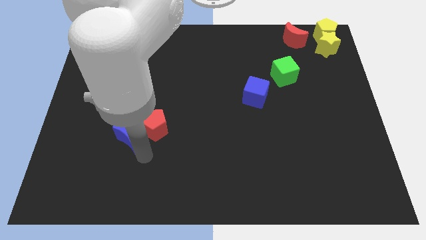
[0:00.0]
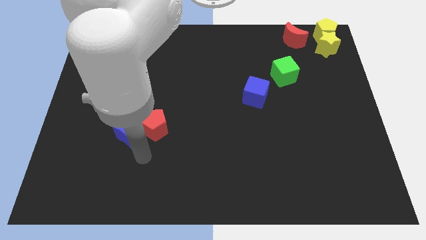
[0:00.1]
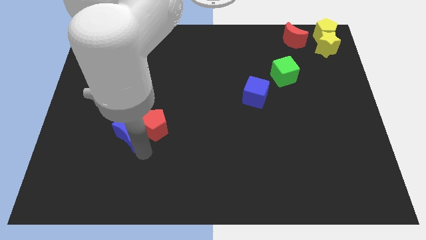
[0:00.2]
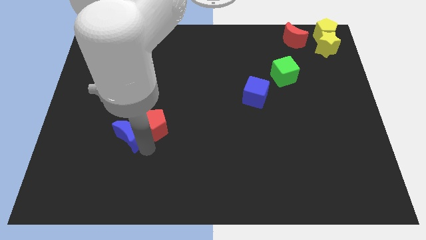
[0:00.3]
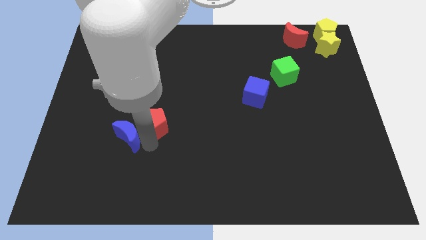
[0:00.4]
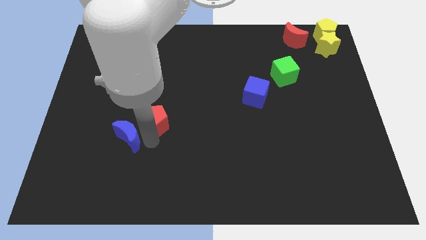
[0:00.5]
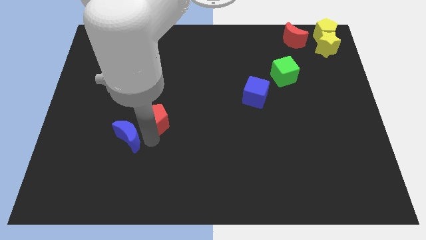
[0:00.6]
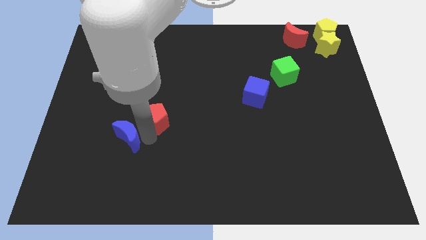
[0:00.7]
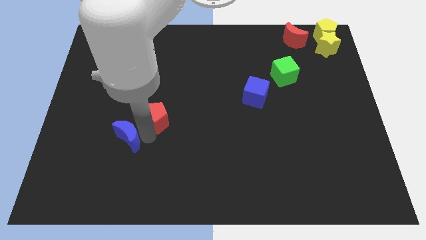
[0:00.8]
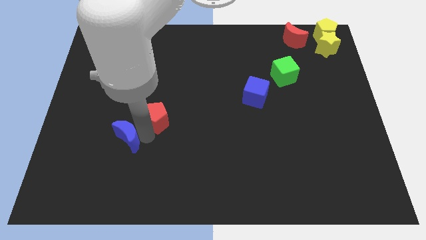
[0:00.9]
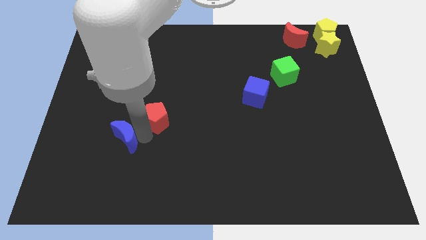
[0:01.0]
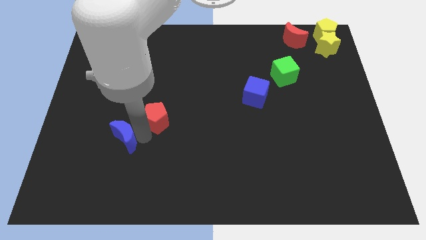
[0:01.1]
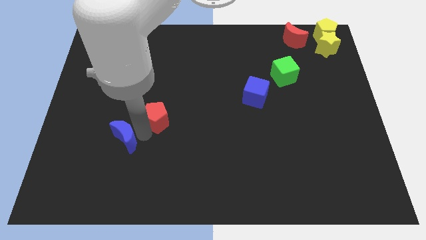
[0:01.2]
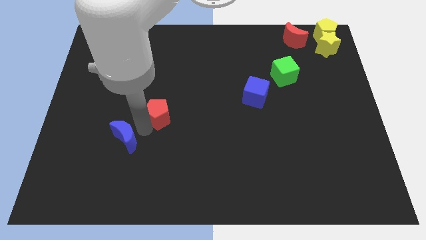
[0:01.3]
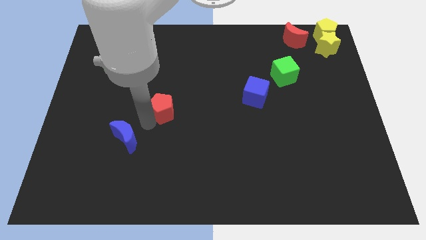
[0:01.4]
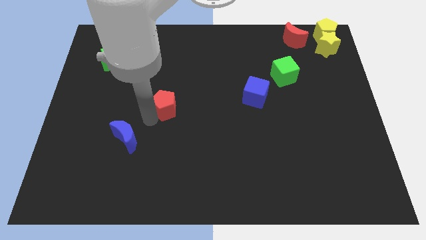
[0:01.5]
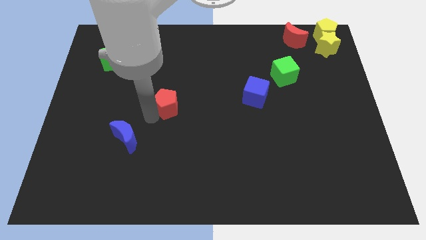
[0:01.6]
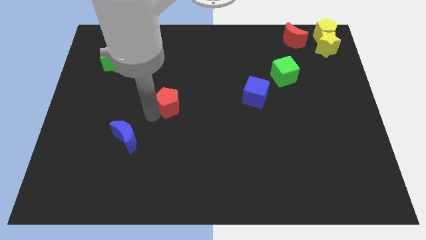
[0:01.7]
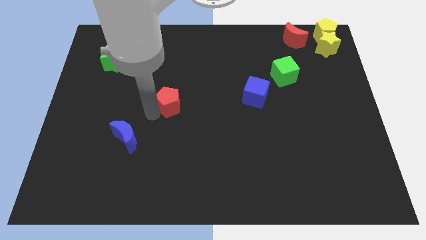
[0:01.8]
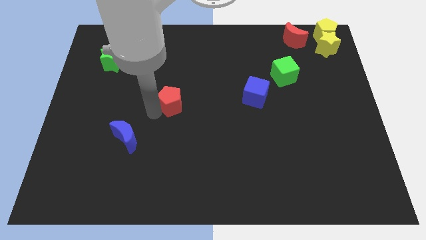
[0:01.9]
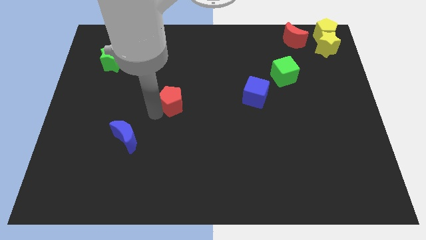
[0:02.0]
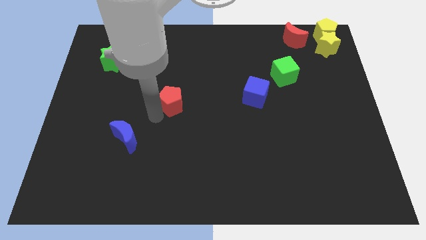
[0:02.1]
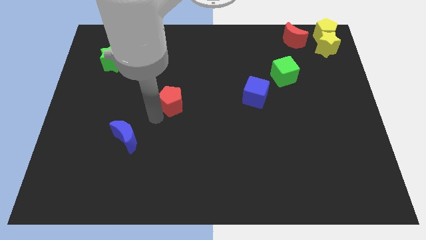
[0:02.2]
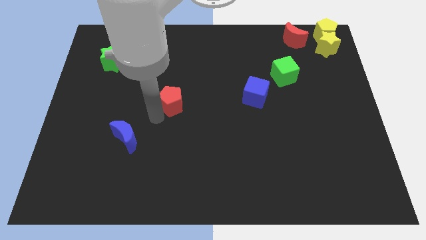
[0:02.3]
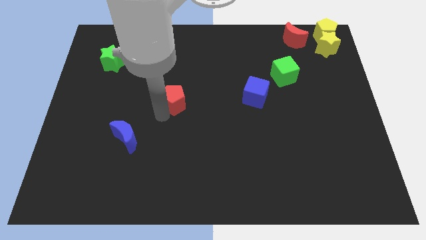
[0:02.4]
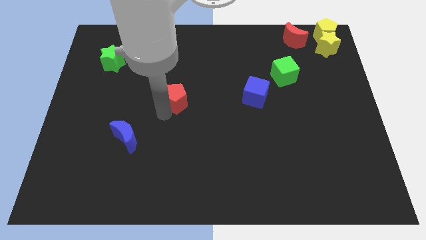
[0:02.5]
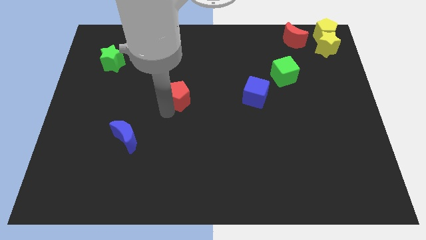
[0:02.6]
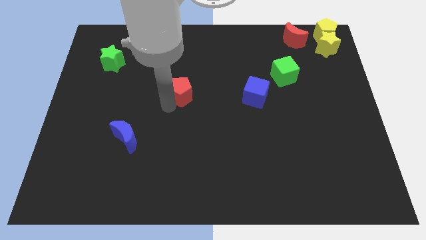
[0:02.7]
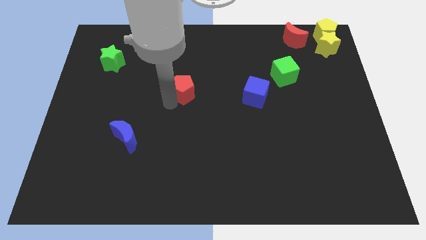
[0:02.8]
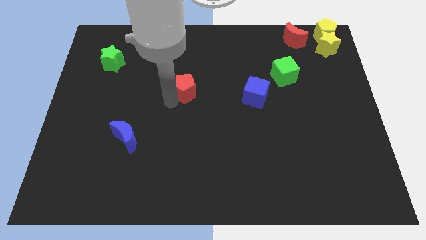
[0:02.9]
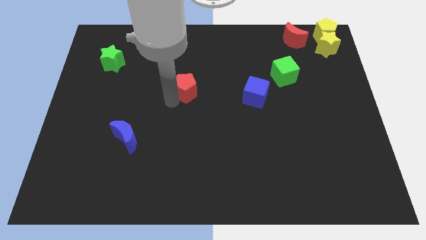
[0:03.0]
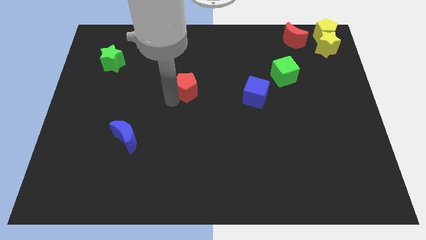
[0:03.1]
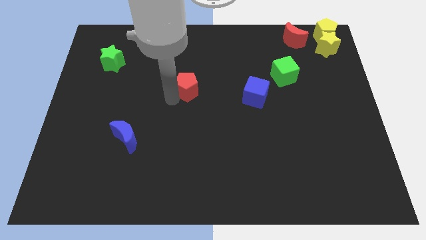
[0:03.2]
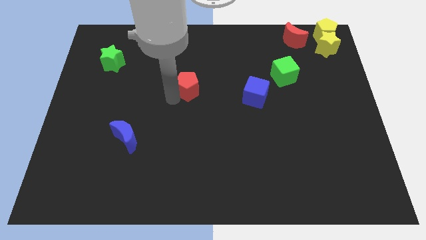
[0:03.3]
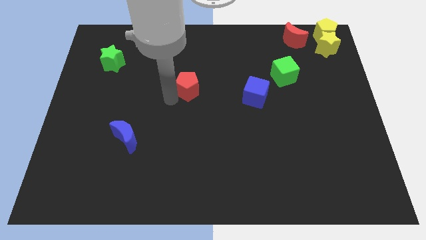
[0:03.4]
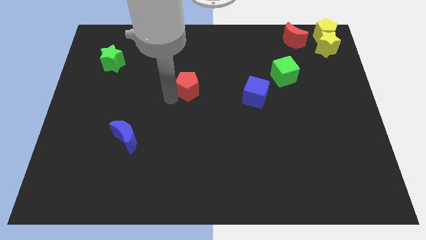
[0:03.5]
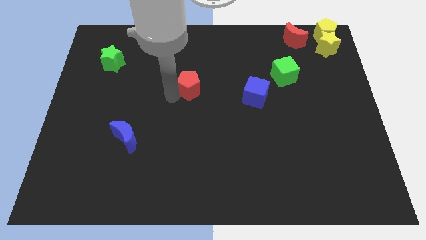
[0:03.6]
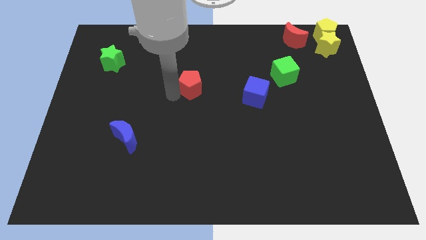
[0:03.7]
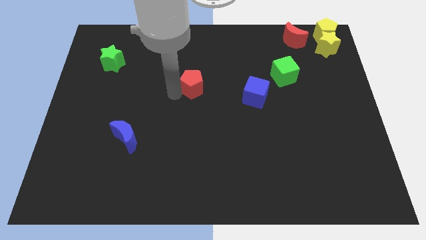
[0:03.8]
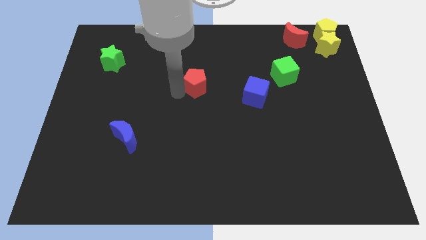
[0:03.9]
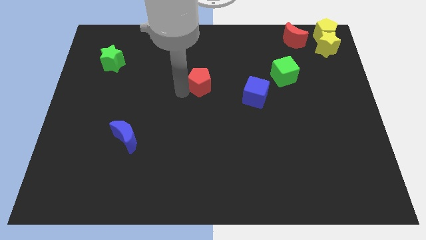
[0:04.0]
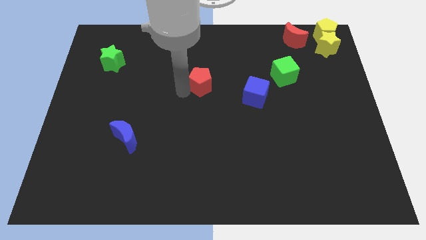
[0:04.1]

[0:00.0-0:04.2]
push red pentagon upwards

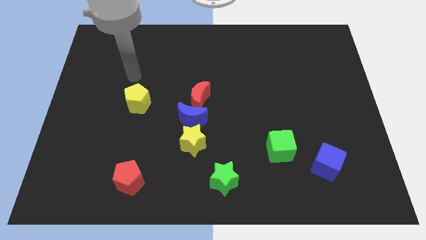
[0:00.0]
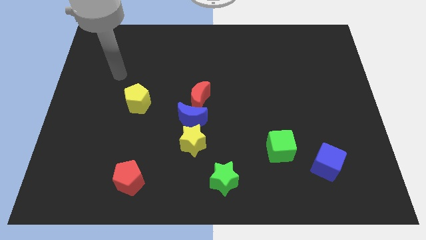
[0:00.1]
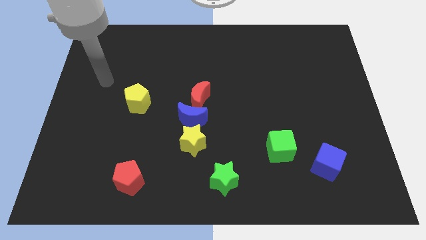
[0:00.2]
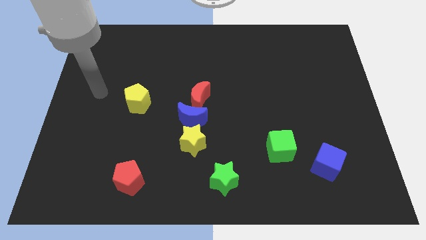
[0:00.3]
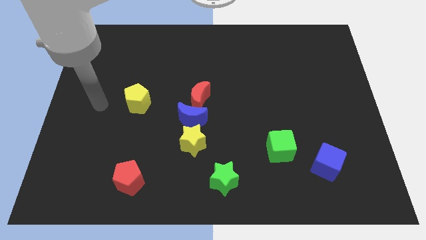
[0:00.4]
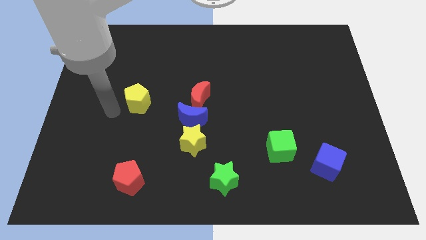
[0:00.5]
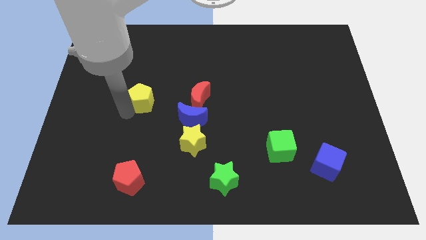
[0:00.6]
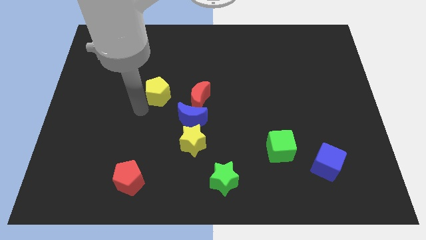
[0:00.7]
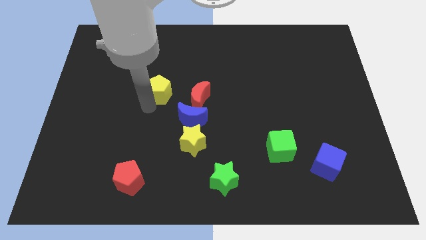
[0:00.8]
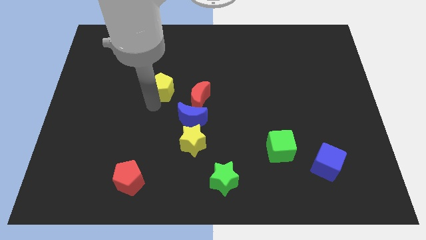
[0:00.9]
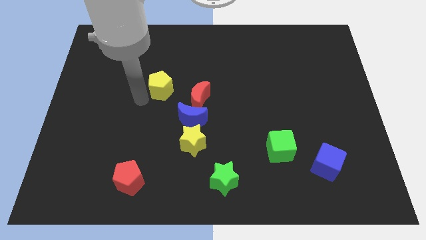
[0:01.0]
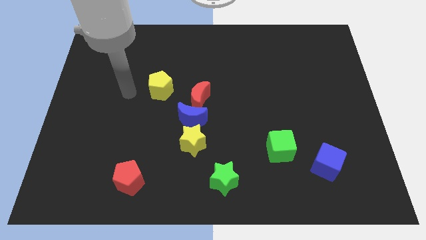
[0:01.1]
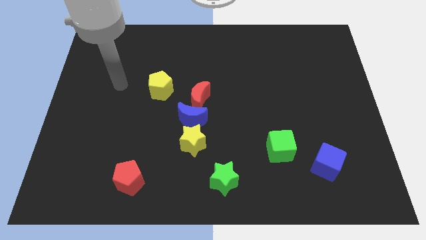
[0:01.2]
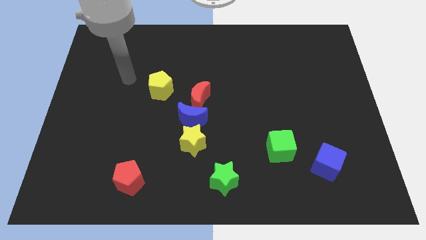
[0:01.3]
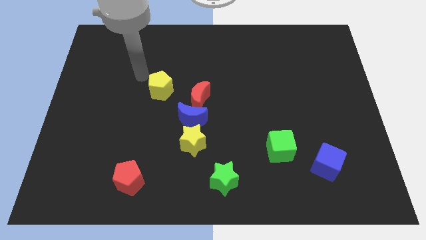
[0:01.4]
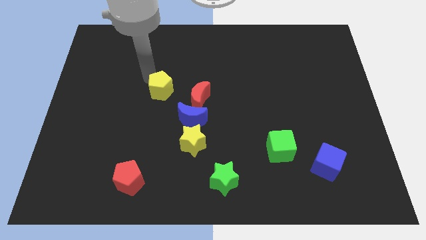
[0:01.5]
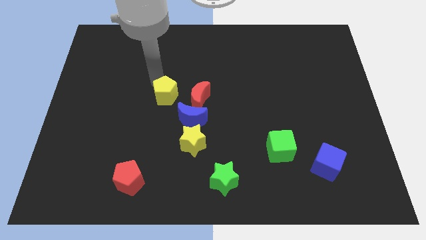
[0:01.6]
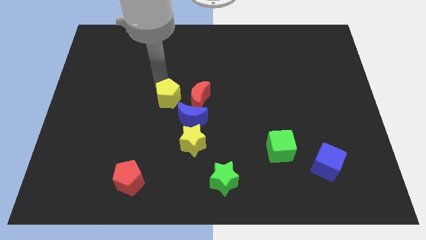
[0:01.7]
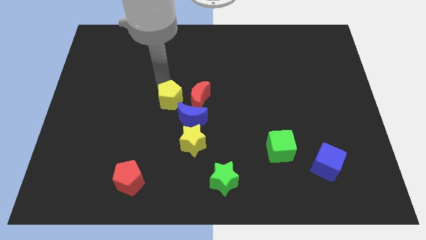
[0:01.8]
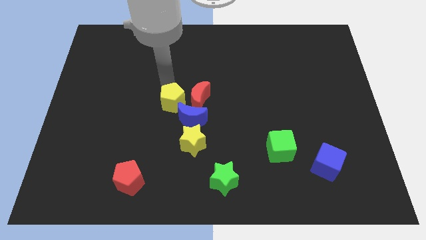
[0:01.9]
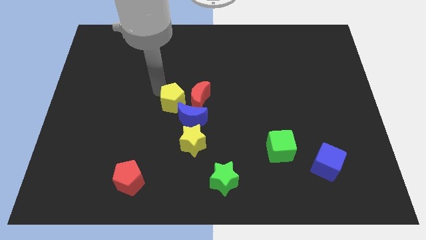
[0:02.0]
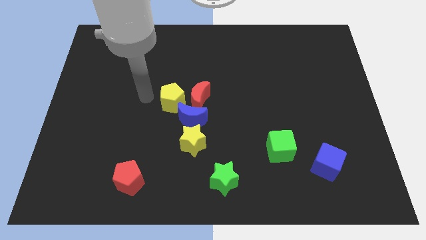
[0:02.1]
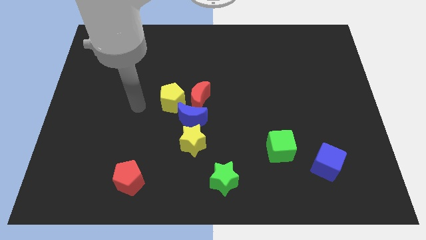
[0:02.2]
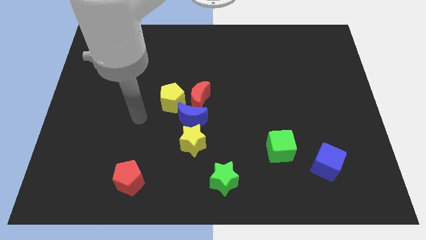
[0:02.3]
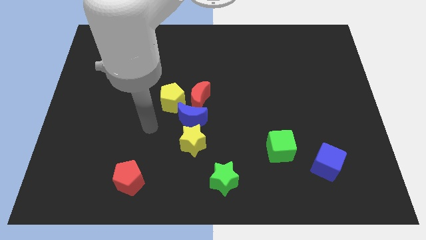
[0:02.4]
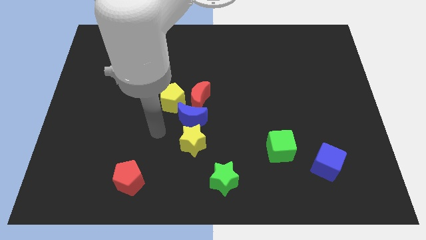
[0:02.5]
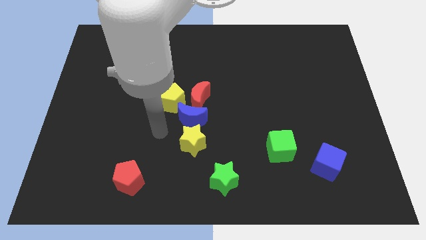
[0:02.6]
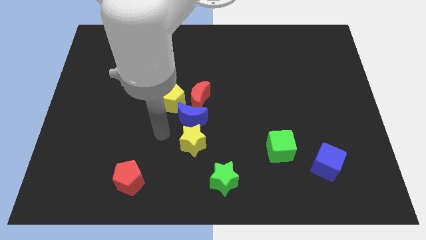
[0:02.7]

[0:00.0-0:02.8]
put yellow pentagon on top left of blue crescent

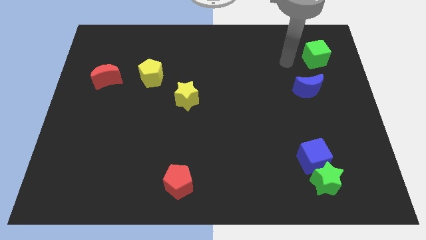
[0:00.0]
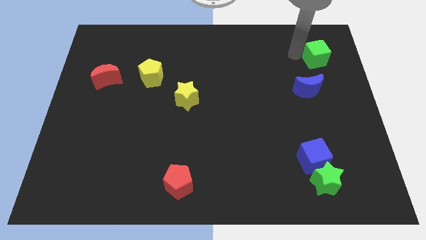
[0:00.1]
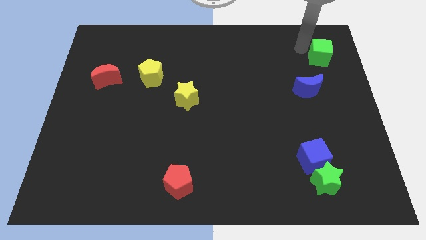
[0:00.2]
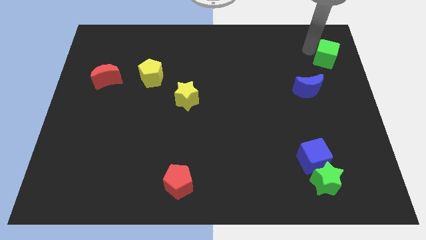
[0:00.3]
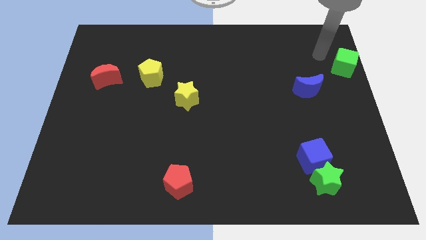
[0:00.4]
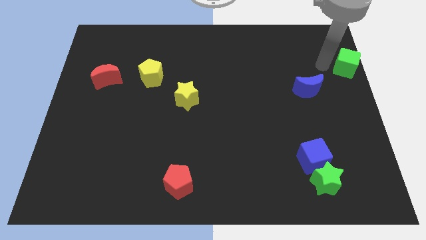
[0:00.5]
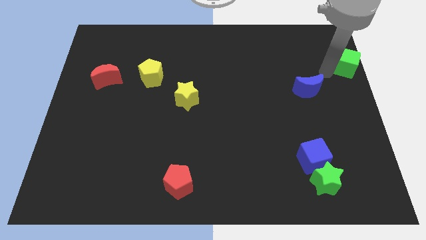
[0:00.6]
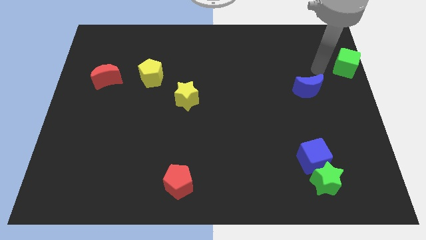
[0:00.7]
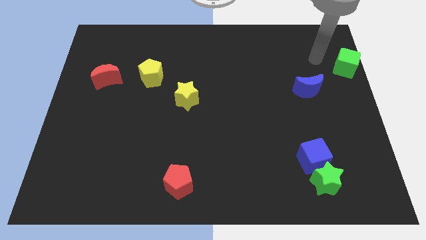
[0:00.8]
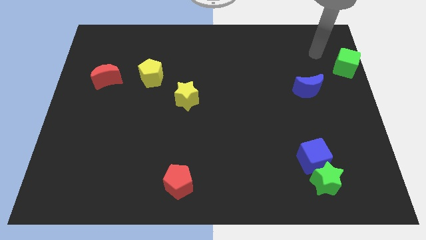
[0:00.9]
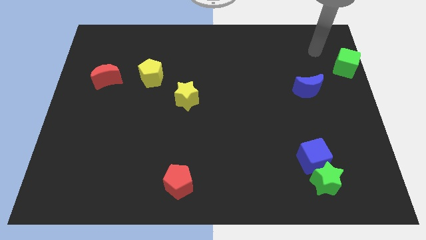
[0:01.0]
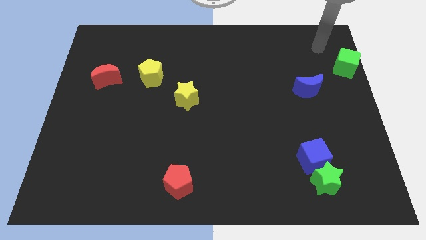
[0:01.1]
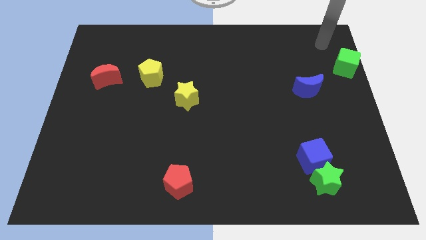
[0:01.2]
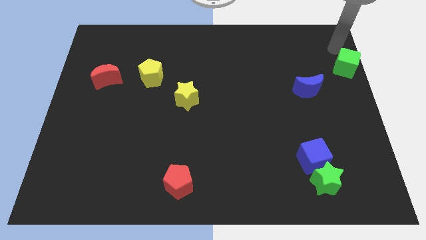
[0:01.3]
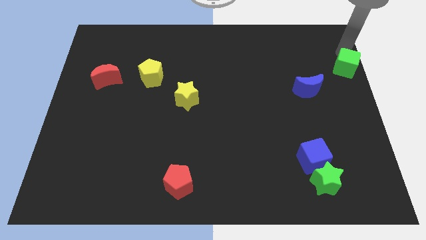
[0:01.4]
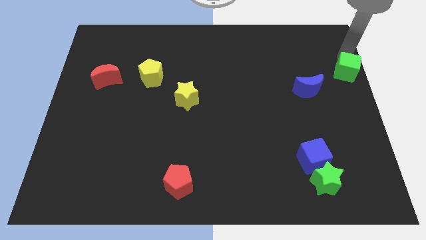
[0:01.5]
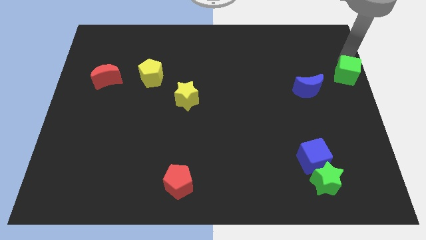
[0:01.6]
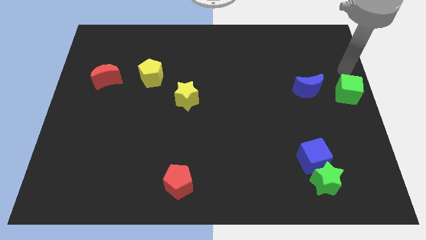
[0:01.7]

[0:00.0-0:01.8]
push the green cube to the right side of the blue moon
